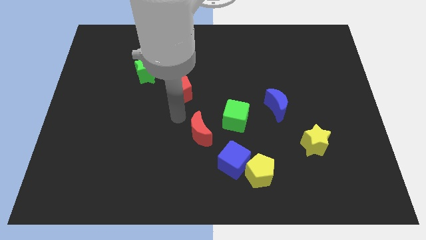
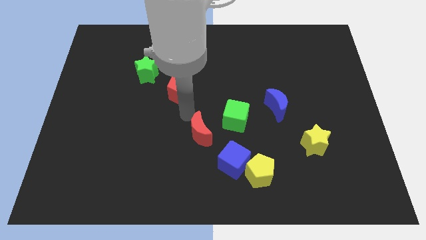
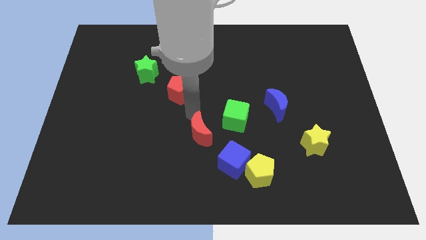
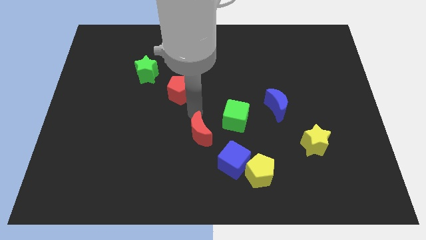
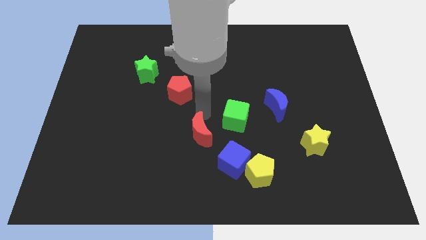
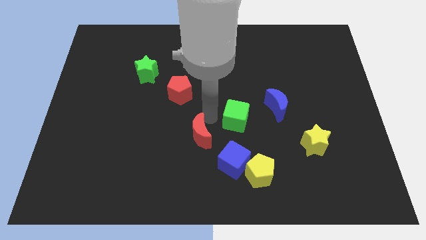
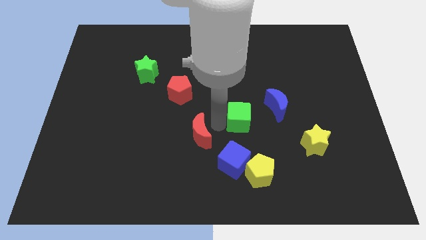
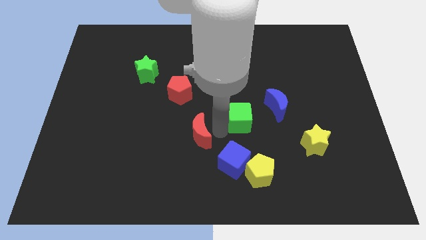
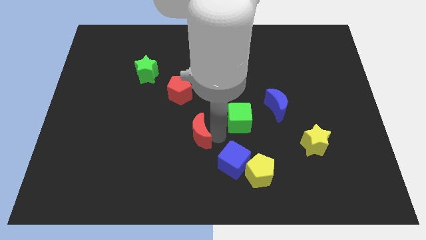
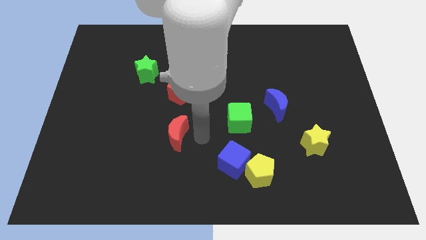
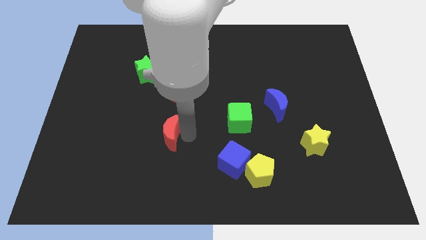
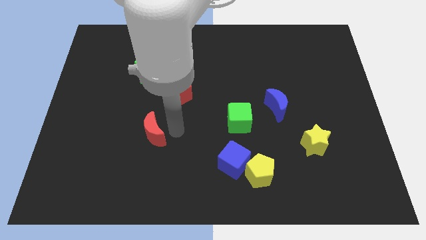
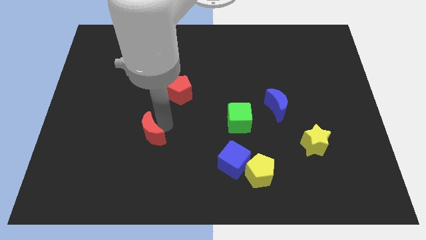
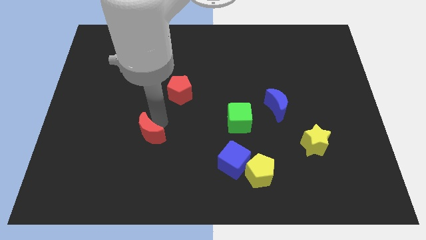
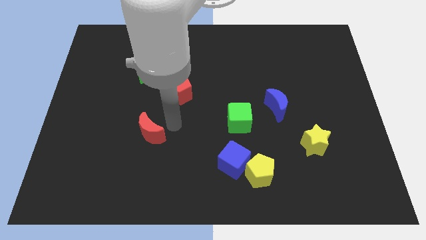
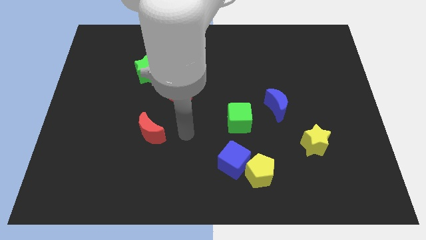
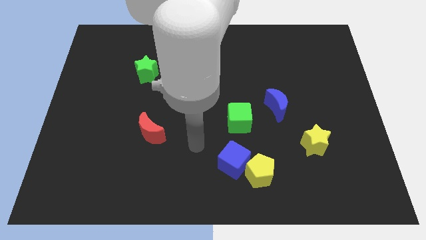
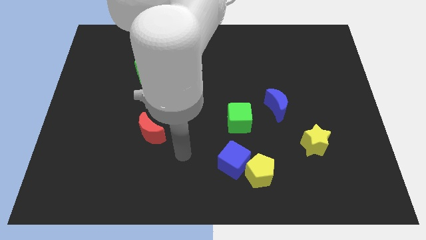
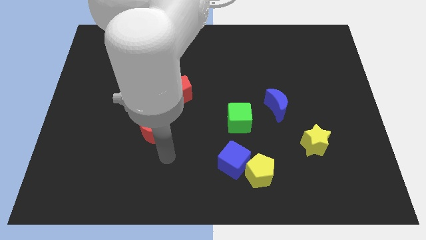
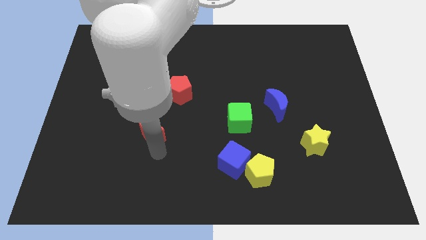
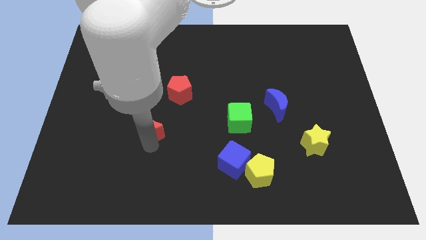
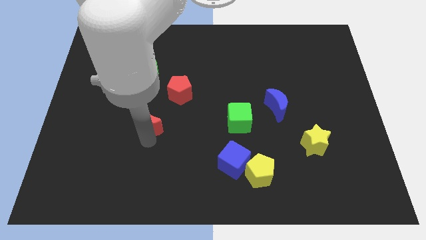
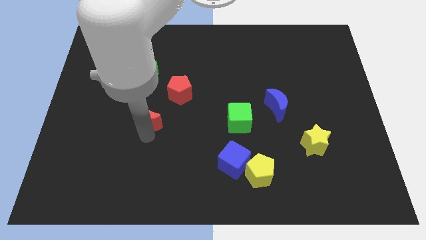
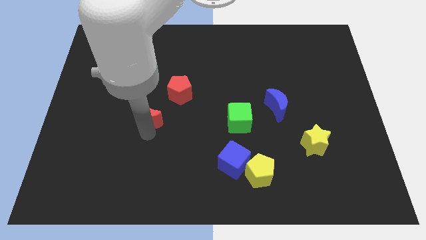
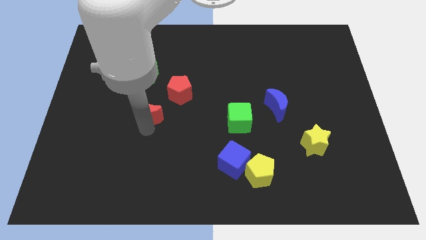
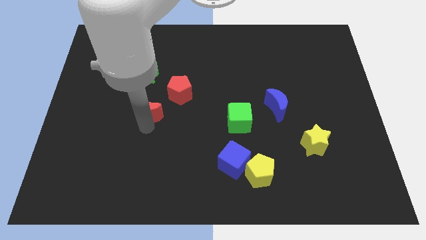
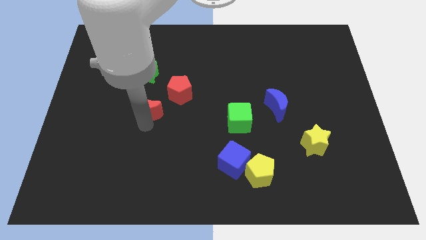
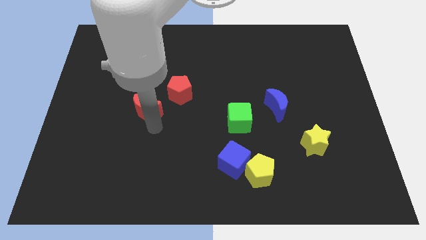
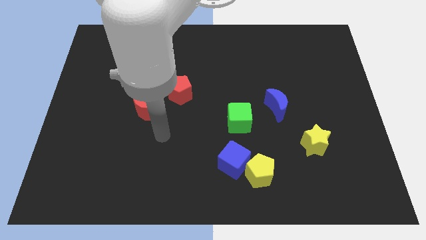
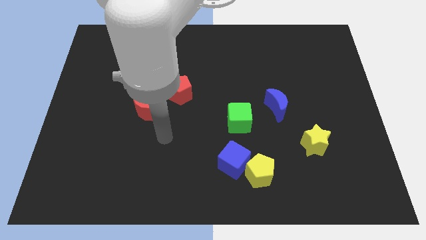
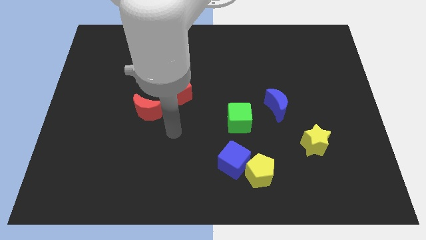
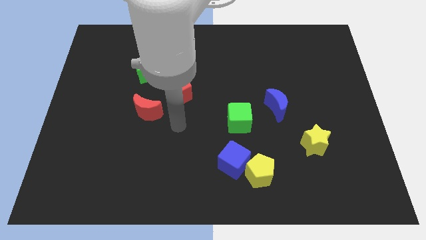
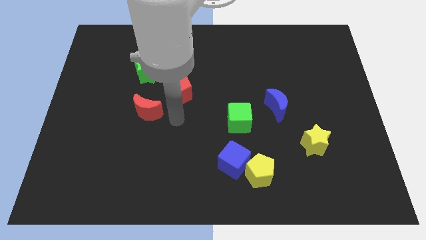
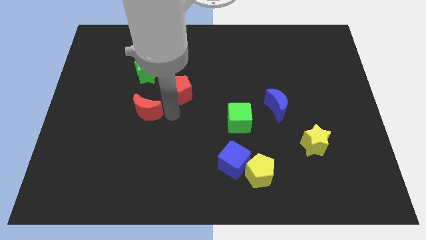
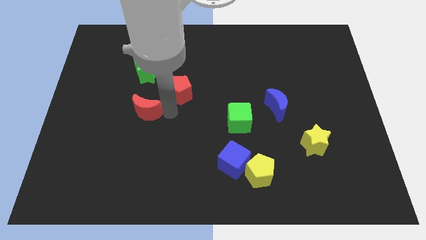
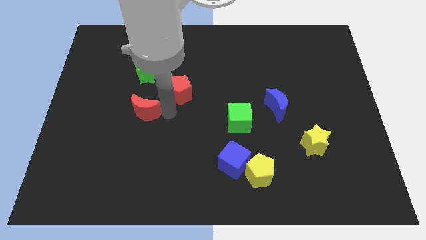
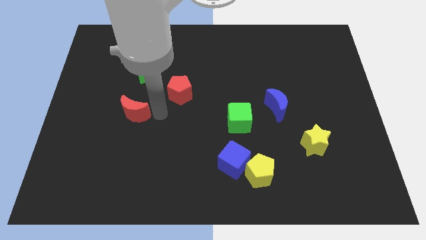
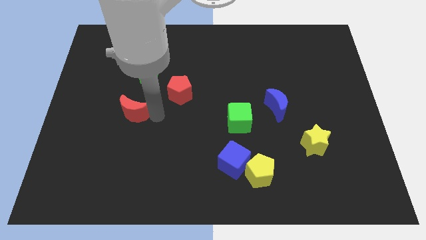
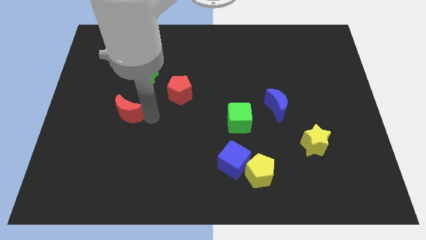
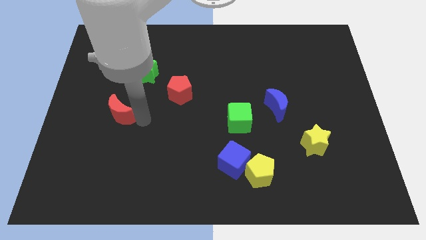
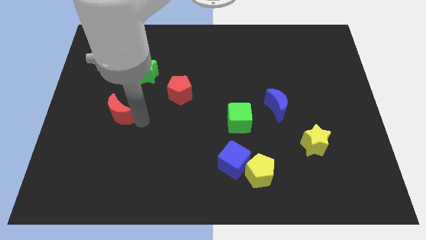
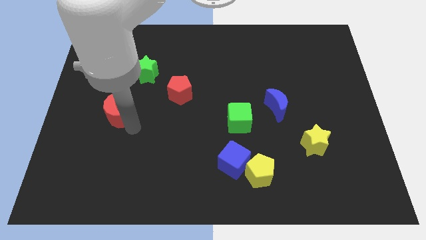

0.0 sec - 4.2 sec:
move the red moon diagonally to the left of the red pentagon

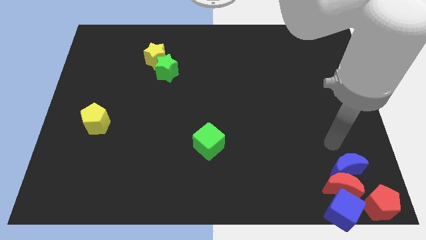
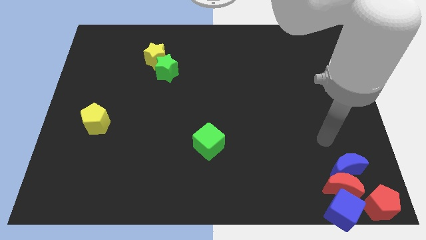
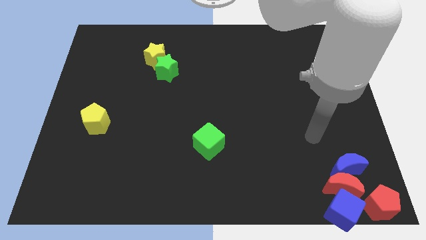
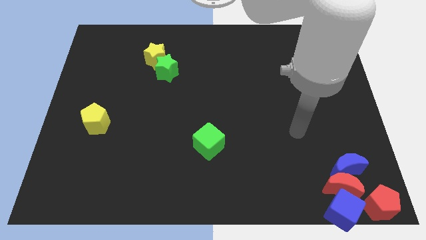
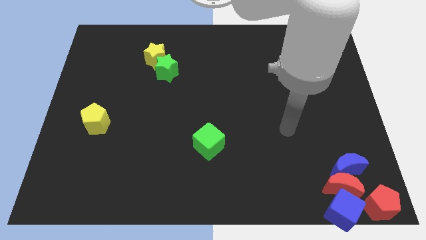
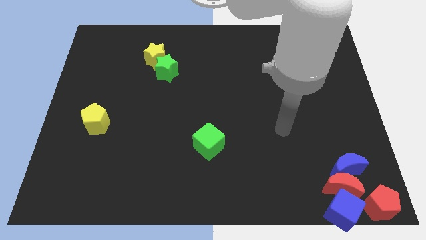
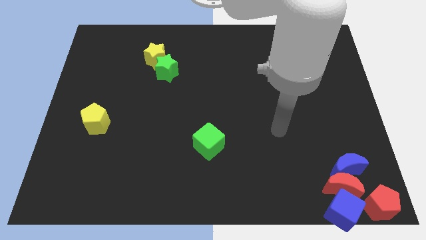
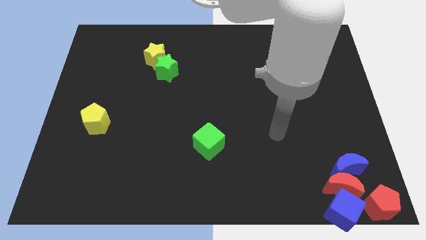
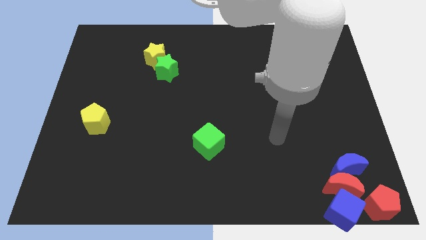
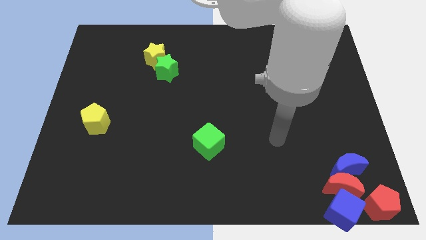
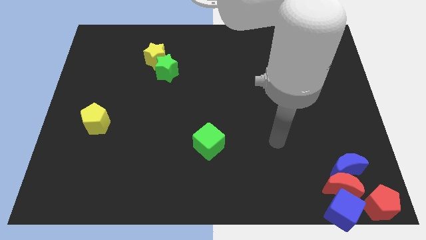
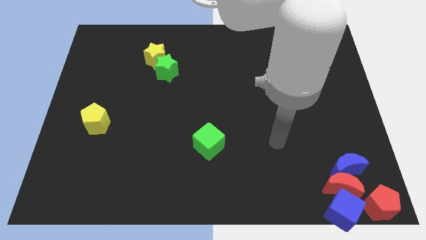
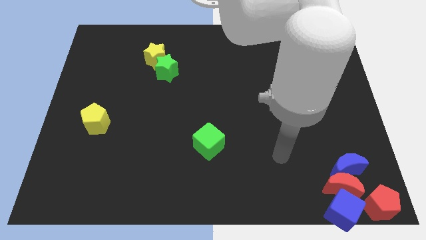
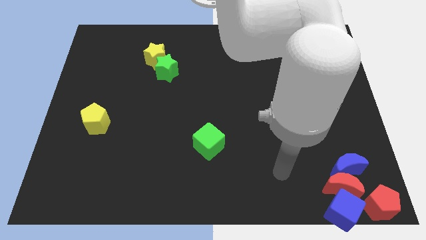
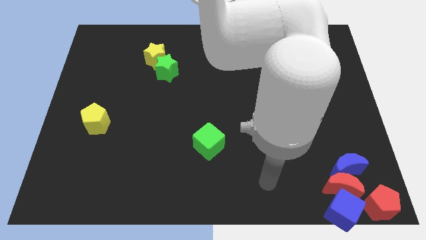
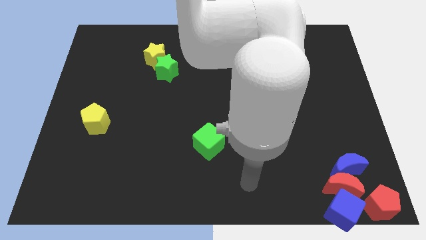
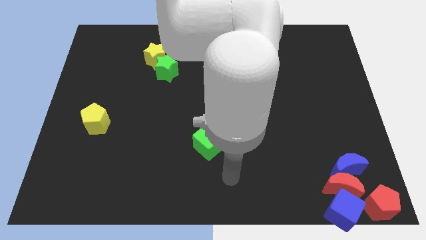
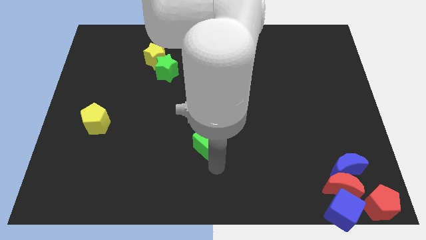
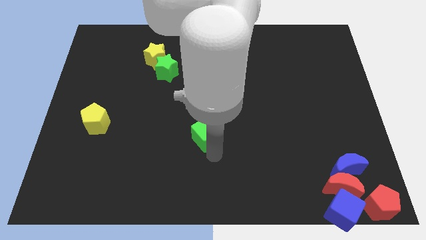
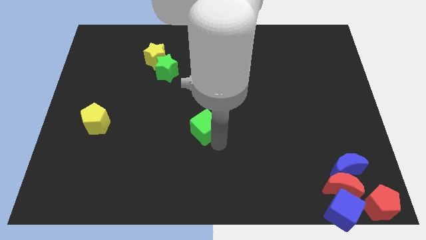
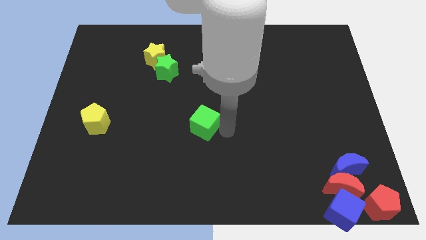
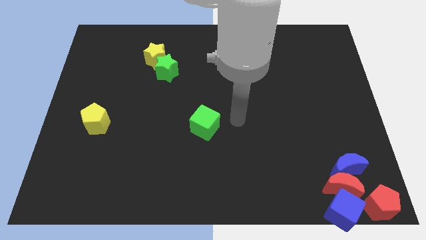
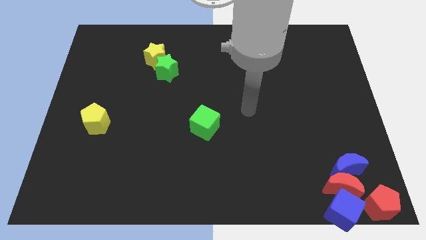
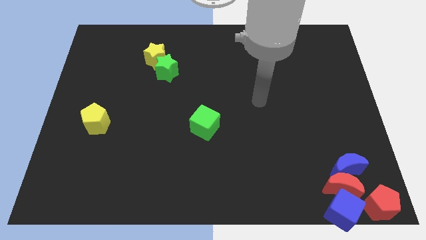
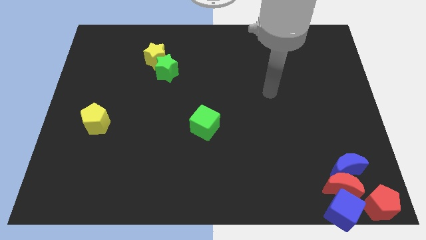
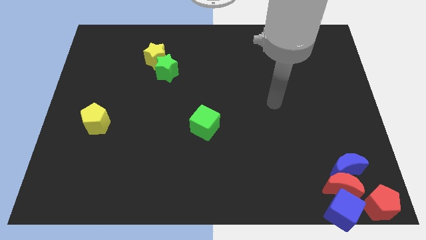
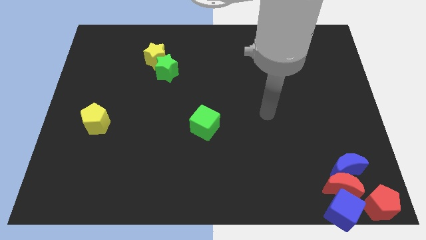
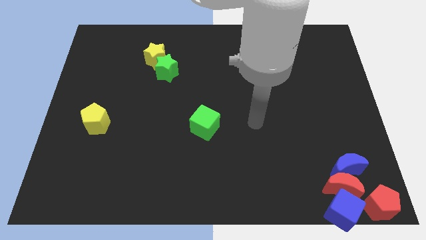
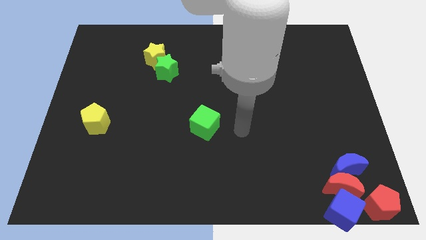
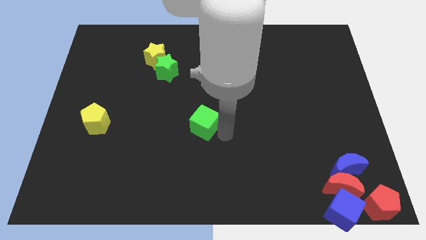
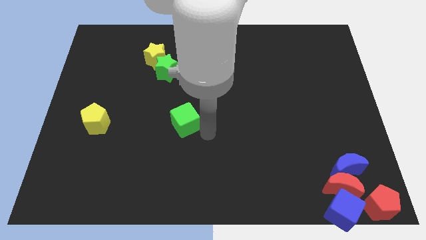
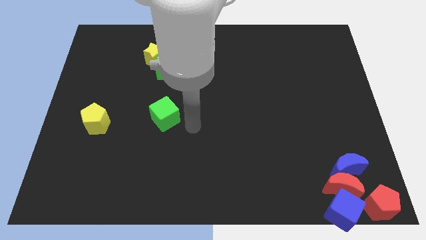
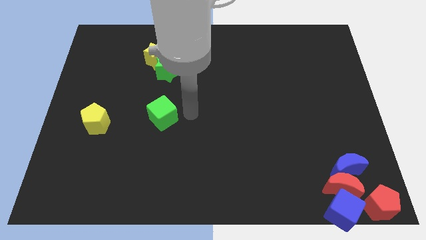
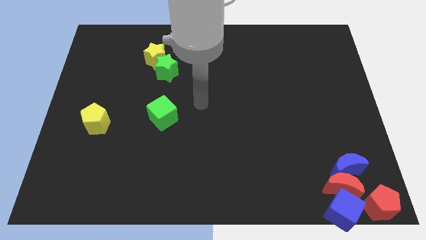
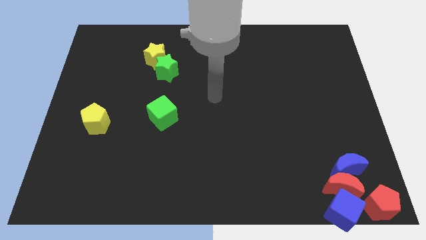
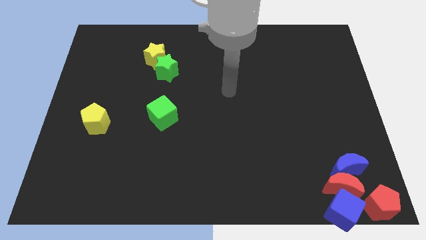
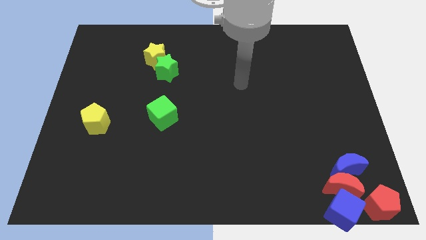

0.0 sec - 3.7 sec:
place the green cube horizontally to the right side of the yellow pentagon

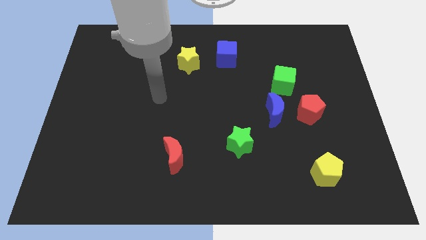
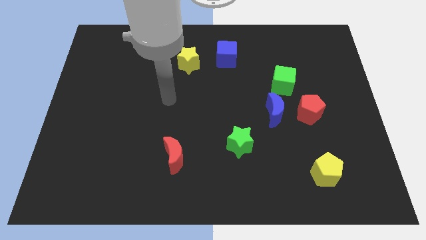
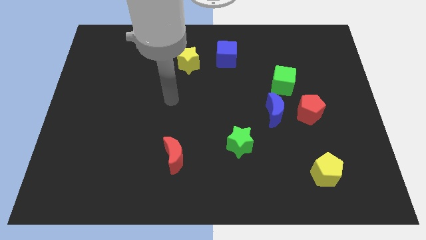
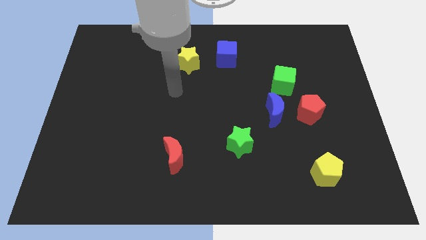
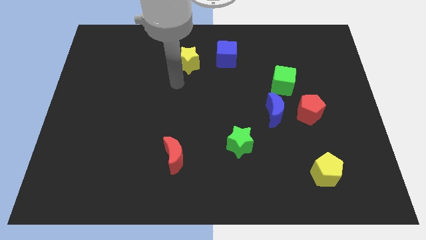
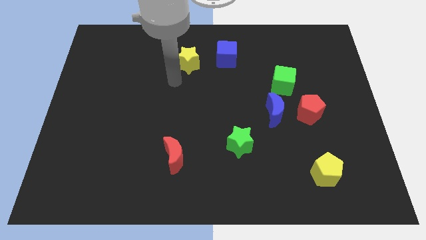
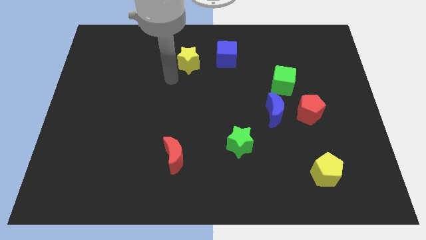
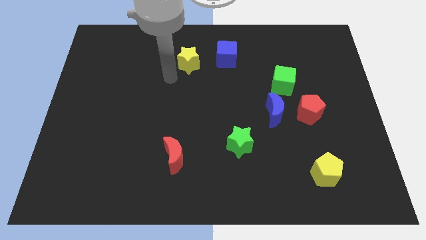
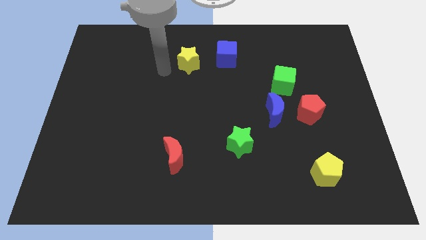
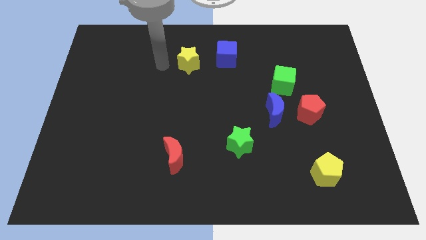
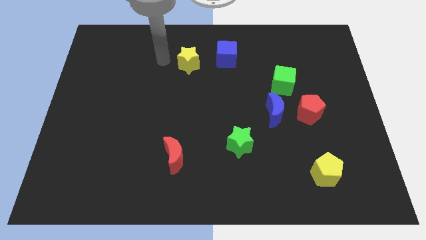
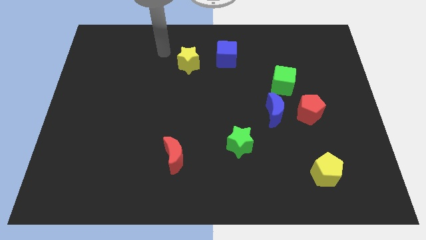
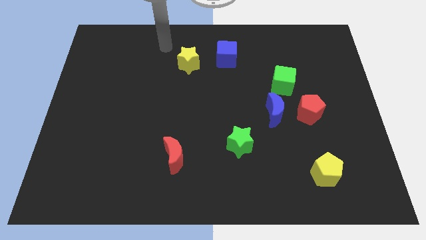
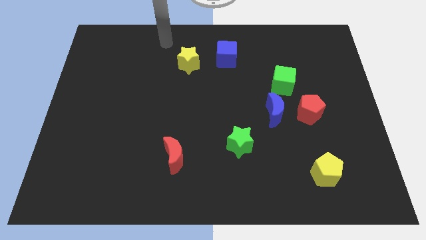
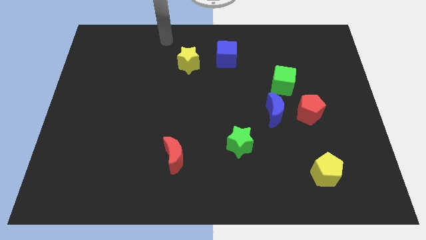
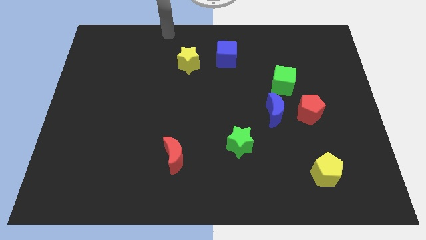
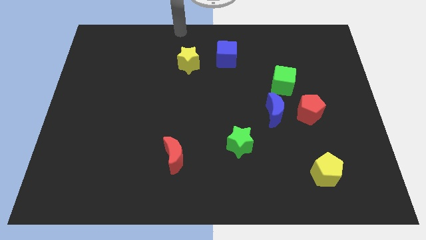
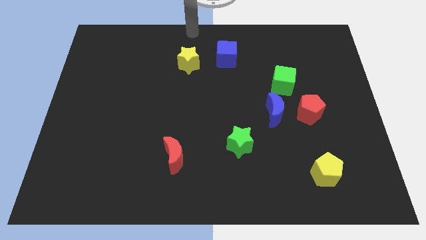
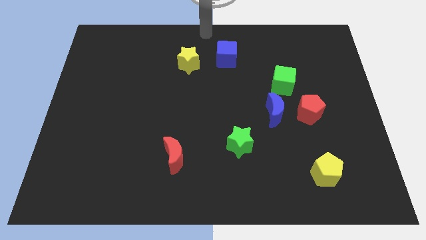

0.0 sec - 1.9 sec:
move arm to the center top
